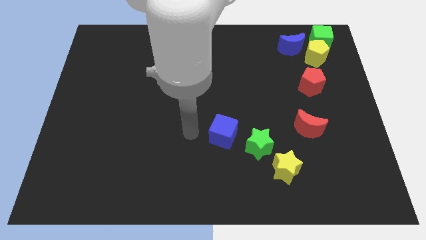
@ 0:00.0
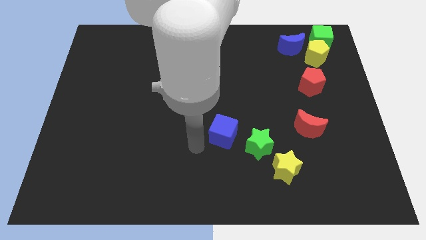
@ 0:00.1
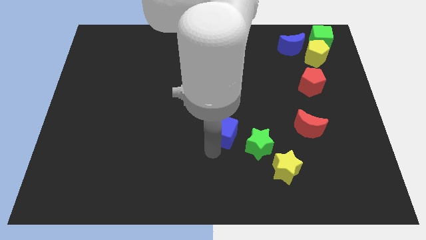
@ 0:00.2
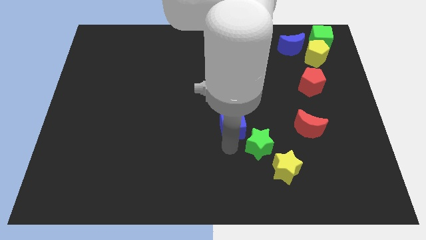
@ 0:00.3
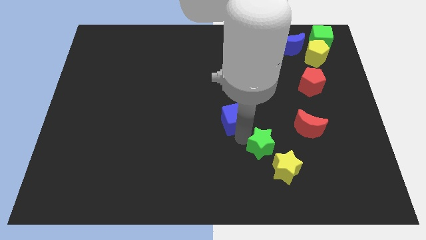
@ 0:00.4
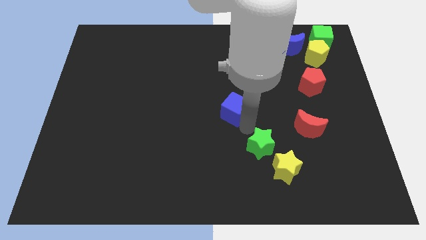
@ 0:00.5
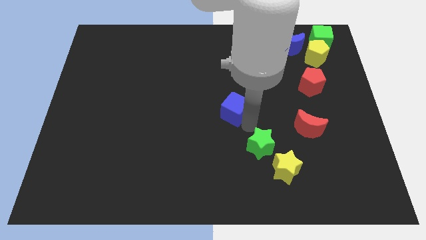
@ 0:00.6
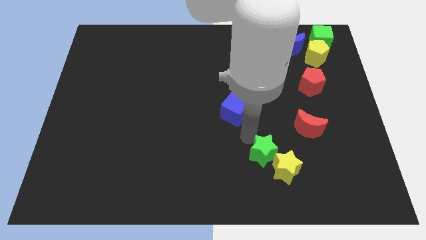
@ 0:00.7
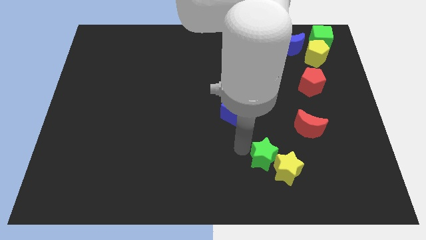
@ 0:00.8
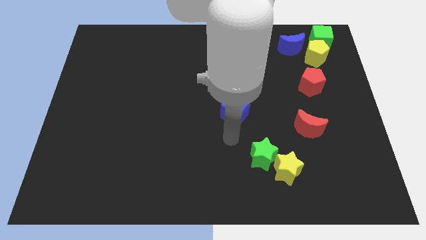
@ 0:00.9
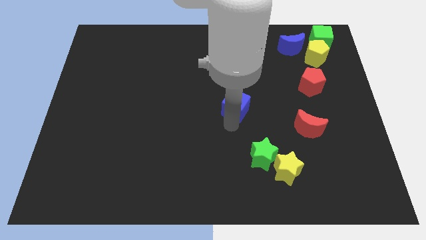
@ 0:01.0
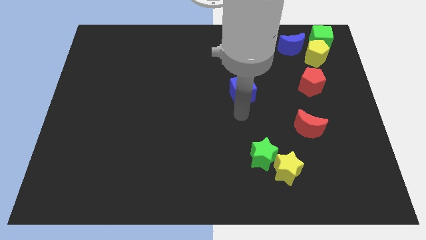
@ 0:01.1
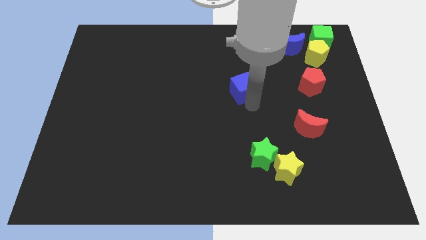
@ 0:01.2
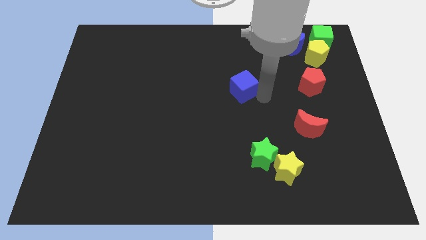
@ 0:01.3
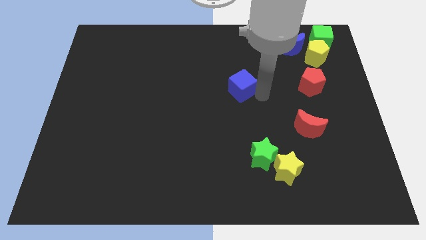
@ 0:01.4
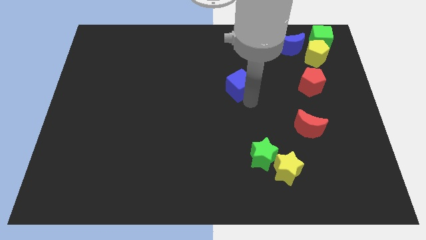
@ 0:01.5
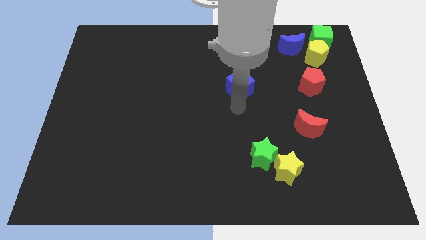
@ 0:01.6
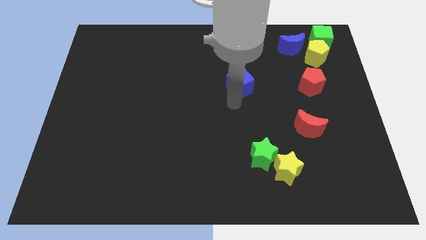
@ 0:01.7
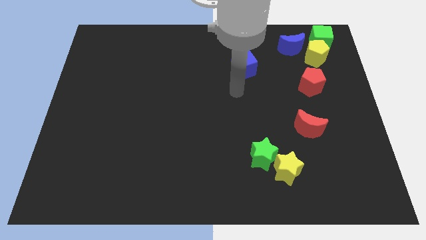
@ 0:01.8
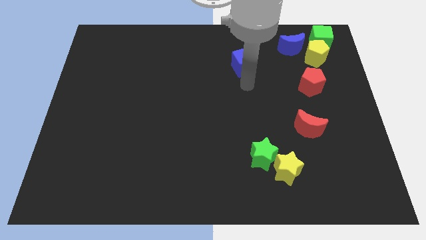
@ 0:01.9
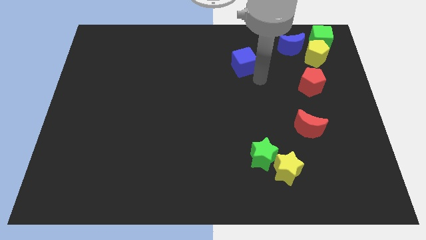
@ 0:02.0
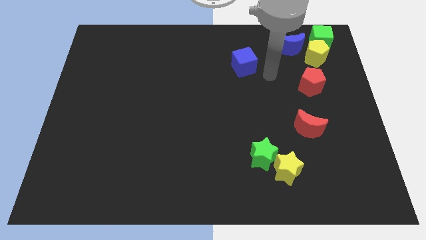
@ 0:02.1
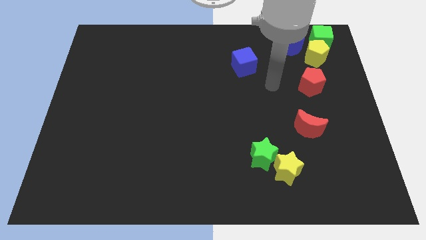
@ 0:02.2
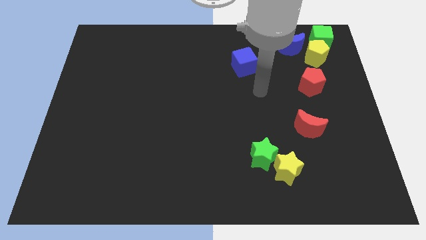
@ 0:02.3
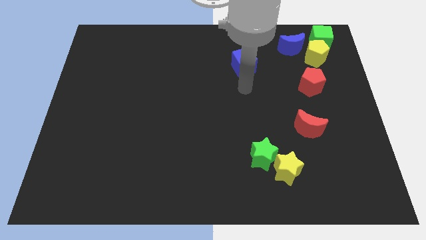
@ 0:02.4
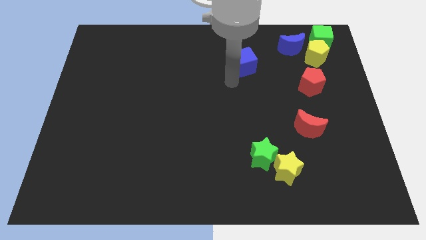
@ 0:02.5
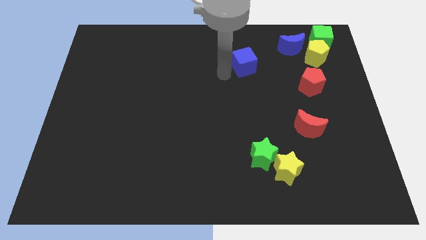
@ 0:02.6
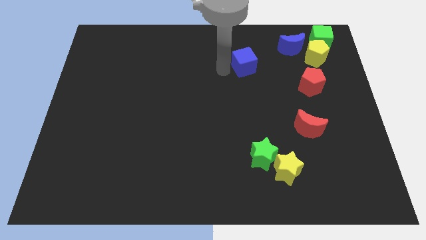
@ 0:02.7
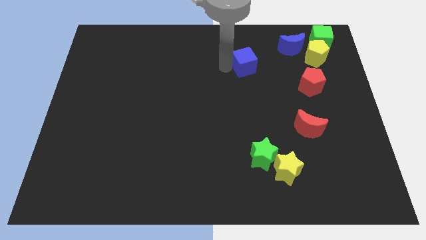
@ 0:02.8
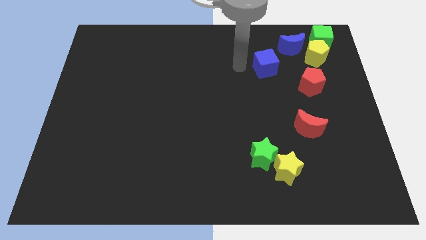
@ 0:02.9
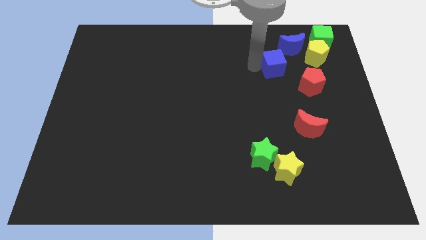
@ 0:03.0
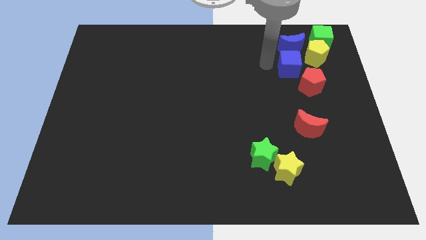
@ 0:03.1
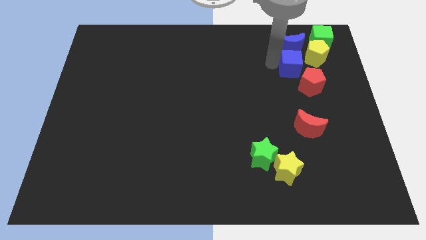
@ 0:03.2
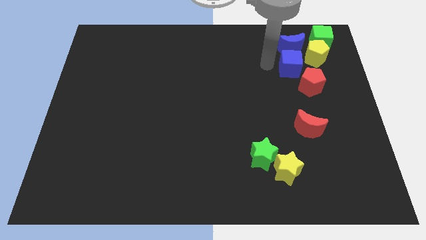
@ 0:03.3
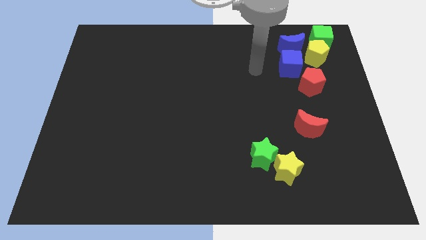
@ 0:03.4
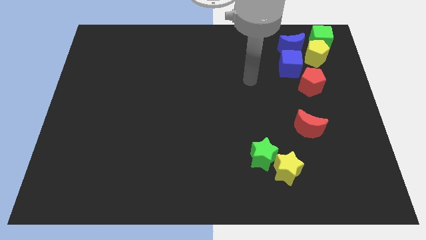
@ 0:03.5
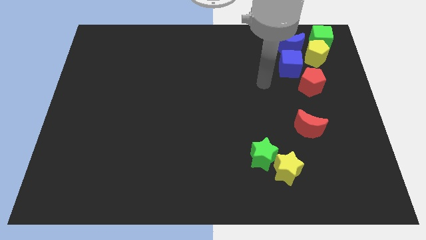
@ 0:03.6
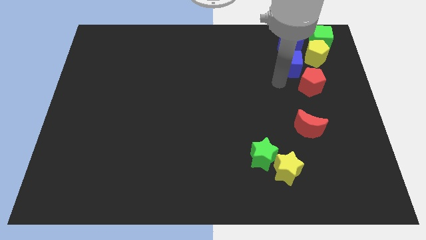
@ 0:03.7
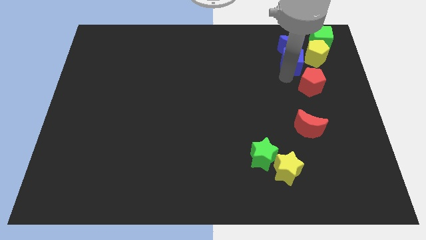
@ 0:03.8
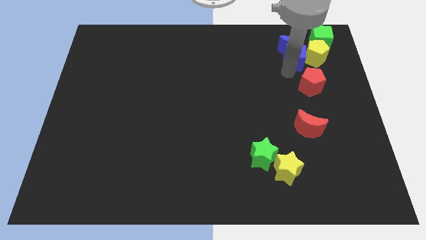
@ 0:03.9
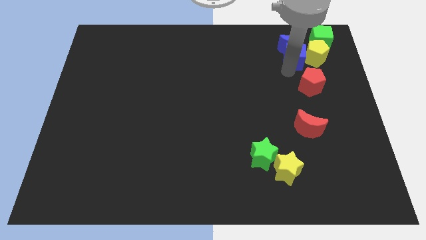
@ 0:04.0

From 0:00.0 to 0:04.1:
add blue cube into yellow pentagon

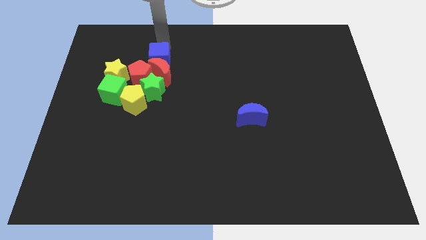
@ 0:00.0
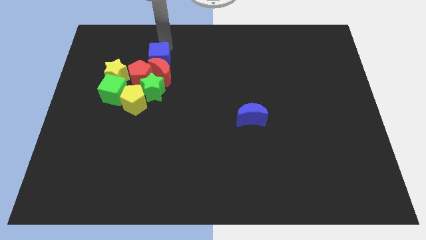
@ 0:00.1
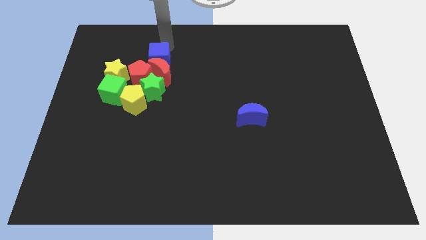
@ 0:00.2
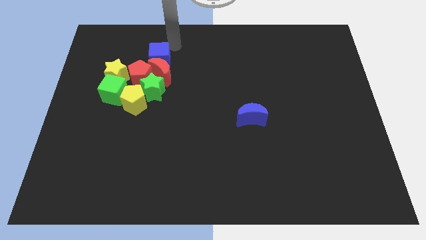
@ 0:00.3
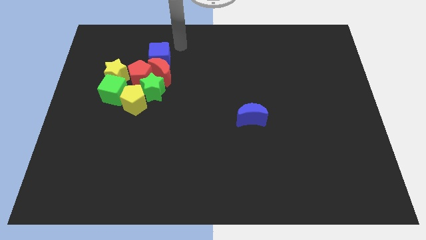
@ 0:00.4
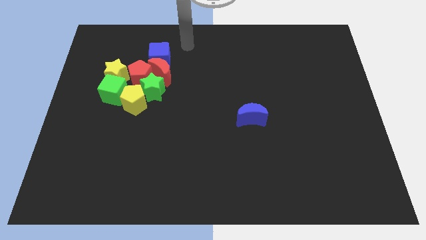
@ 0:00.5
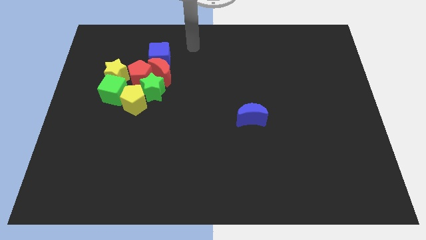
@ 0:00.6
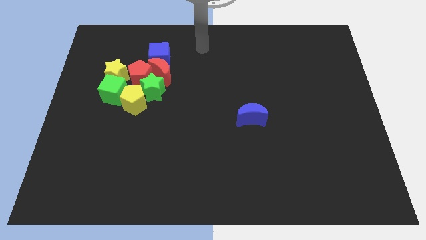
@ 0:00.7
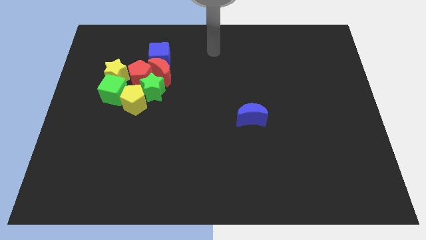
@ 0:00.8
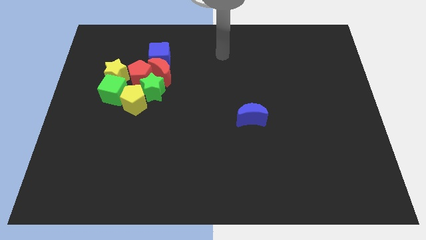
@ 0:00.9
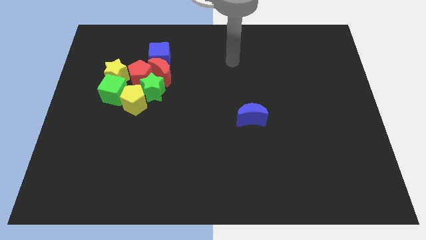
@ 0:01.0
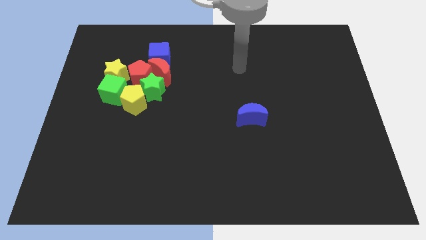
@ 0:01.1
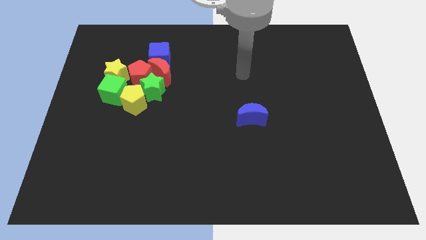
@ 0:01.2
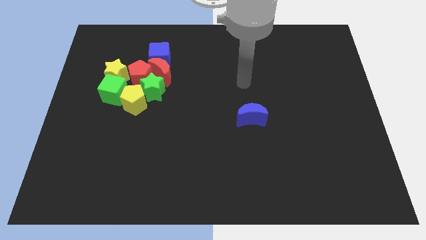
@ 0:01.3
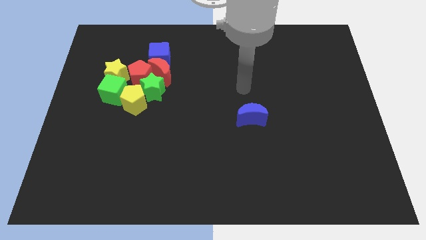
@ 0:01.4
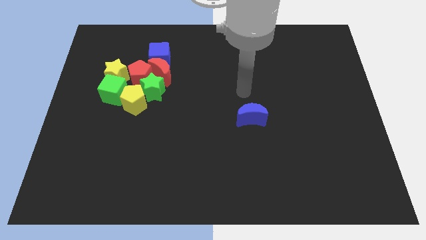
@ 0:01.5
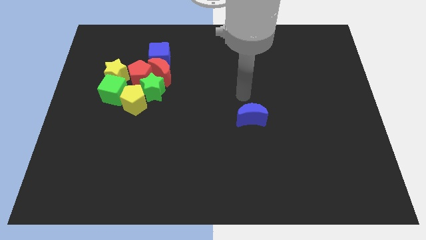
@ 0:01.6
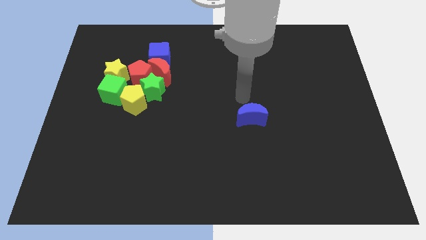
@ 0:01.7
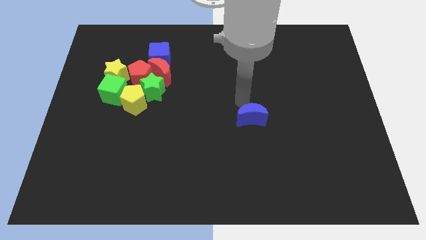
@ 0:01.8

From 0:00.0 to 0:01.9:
move the arm on top of blue crescent

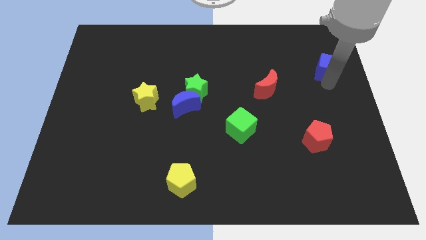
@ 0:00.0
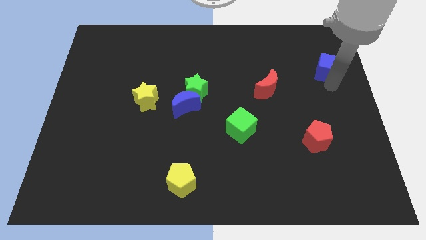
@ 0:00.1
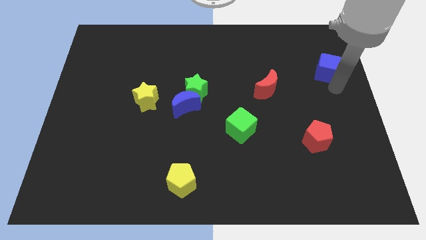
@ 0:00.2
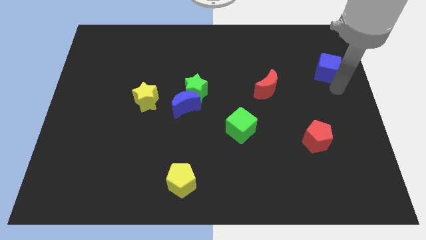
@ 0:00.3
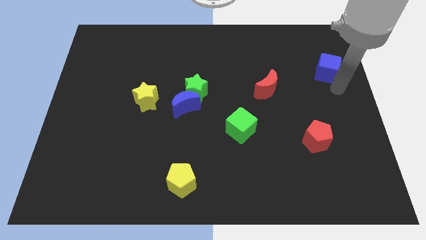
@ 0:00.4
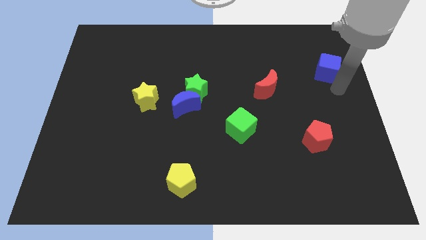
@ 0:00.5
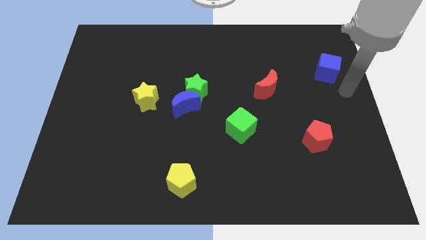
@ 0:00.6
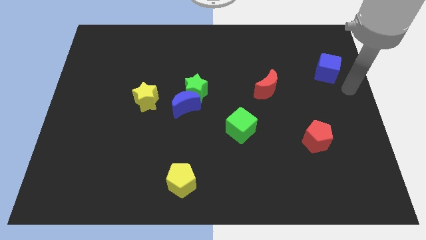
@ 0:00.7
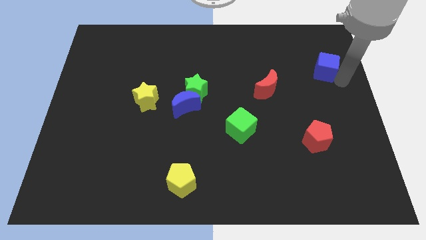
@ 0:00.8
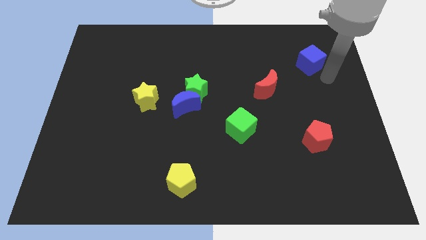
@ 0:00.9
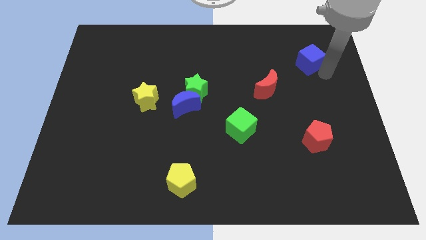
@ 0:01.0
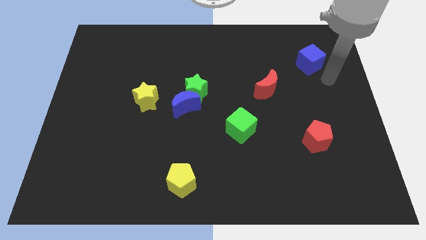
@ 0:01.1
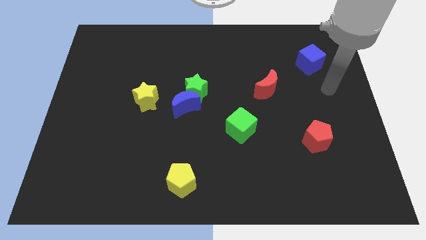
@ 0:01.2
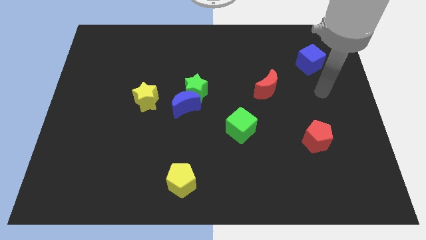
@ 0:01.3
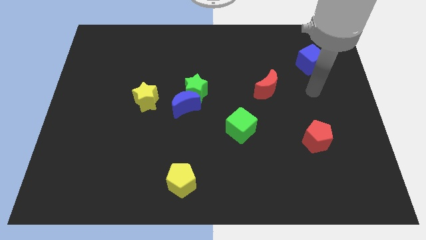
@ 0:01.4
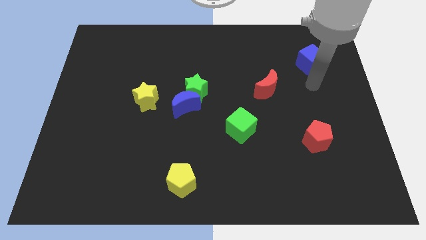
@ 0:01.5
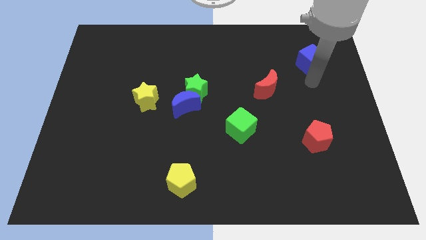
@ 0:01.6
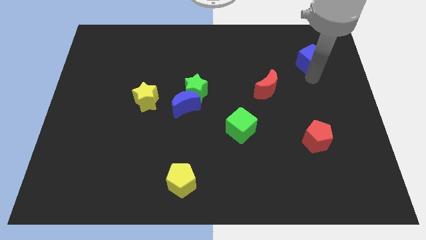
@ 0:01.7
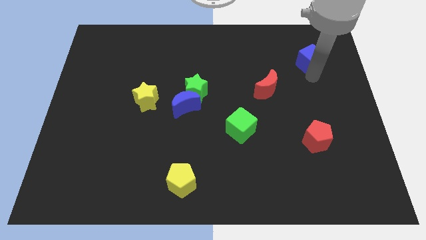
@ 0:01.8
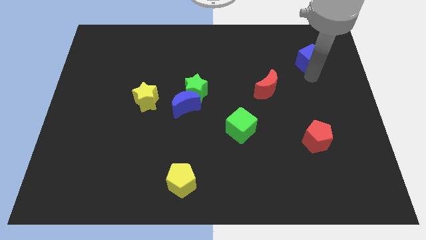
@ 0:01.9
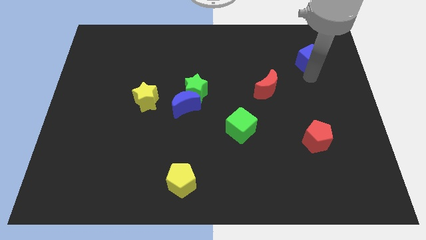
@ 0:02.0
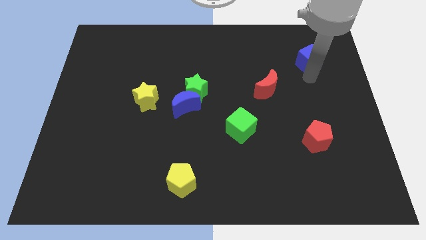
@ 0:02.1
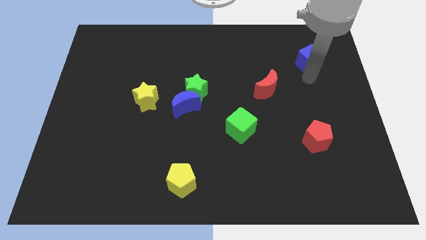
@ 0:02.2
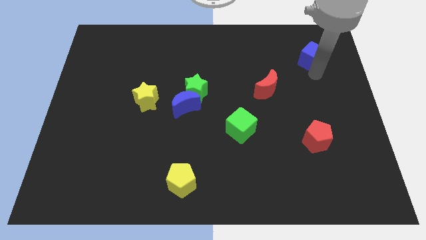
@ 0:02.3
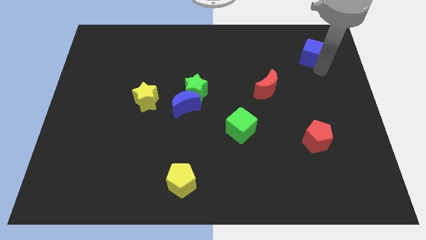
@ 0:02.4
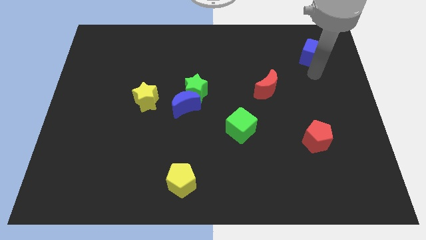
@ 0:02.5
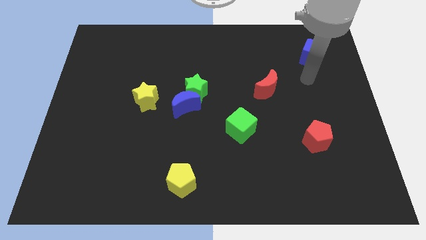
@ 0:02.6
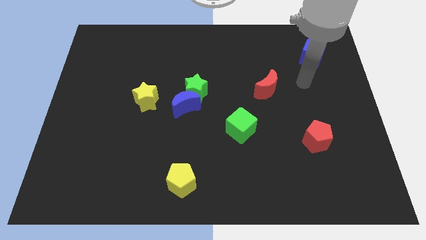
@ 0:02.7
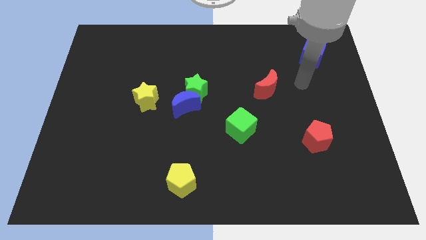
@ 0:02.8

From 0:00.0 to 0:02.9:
move the blue cube diagonally above the red crescent
